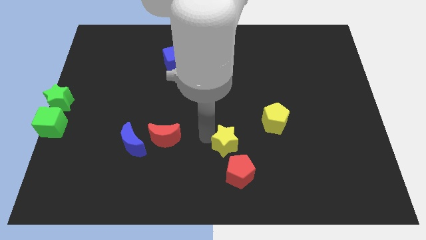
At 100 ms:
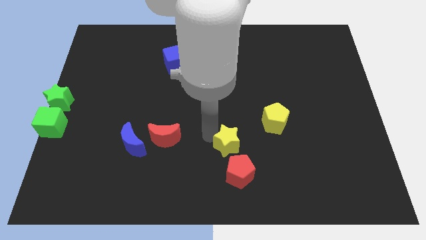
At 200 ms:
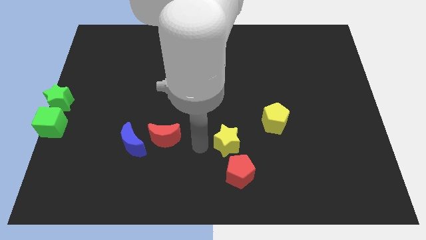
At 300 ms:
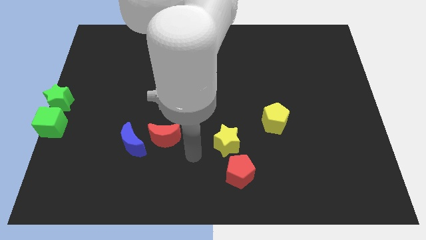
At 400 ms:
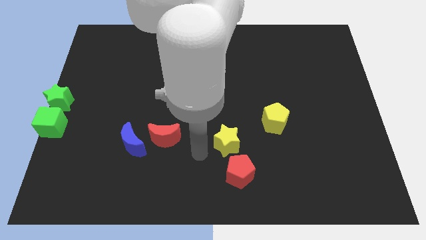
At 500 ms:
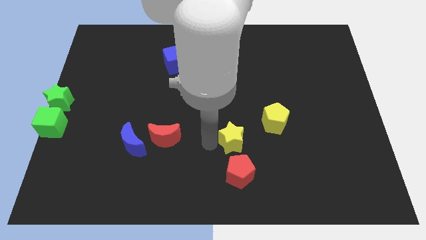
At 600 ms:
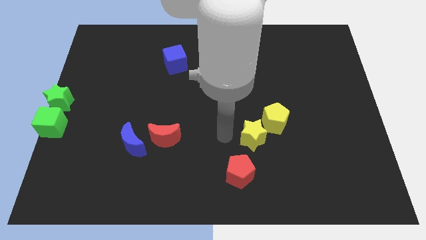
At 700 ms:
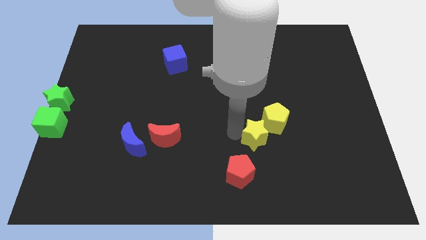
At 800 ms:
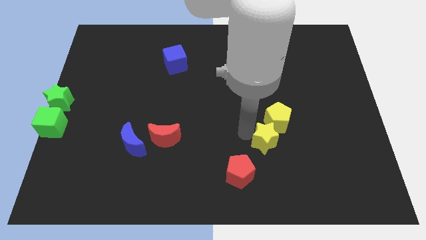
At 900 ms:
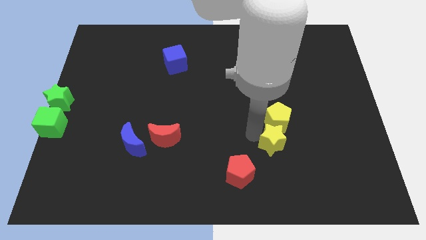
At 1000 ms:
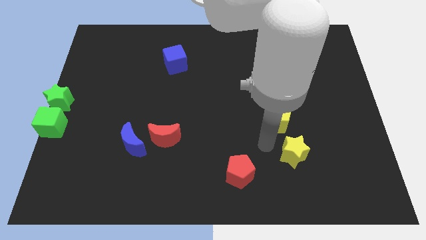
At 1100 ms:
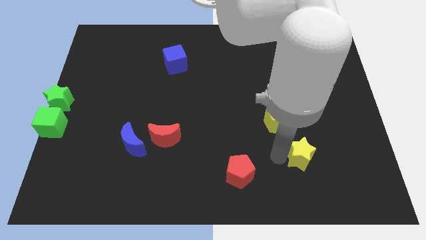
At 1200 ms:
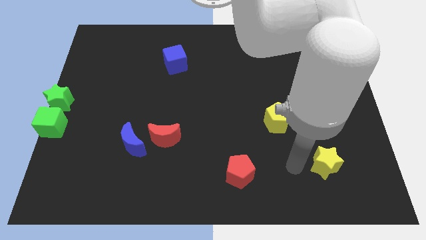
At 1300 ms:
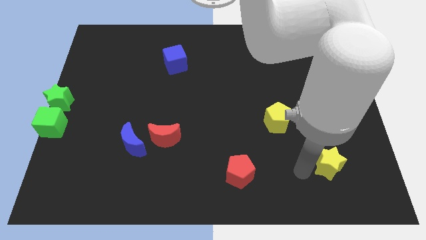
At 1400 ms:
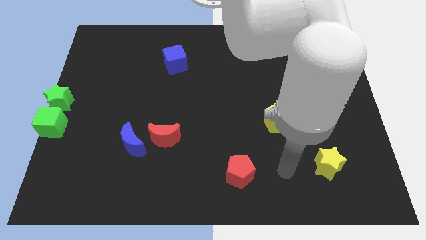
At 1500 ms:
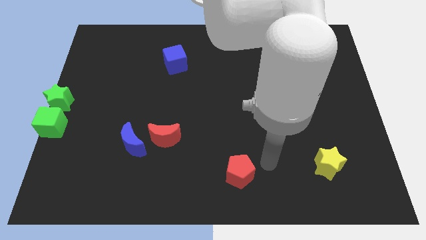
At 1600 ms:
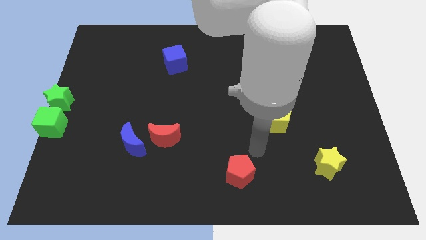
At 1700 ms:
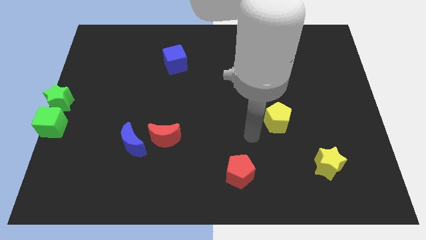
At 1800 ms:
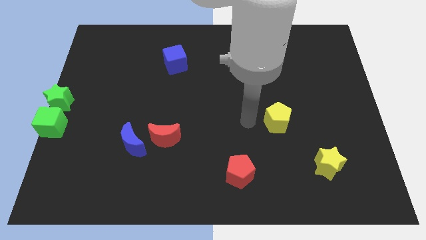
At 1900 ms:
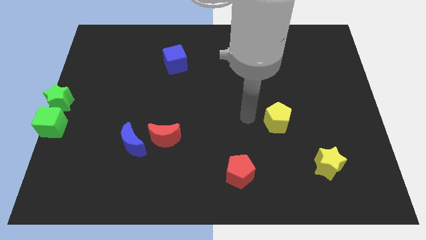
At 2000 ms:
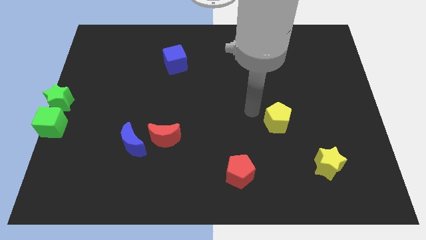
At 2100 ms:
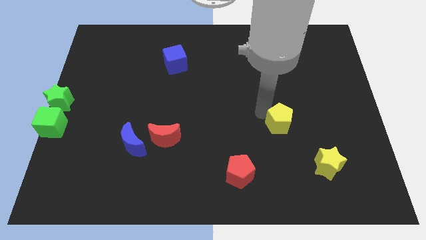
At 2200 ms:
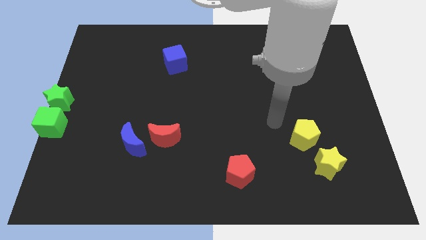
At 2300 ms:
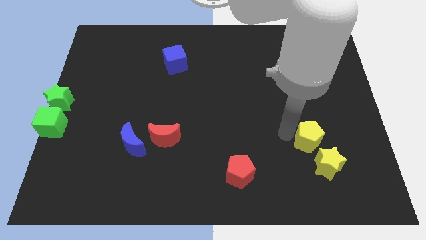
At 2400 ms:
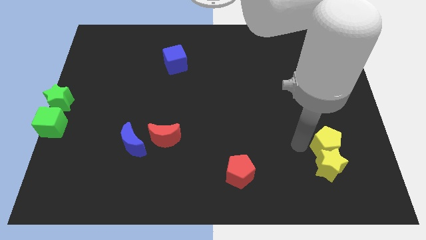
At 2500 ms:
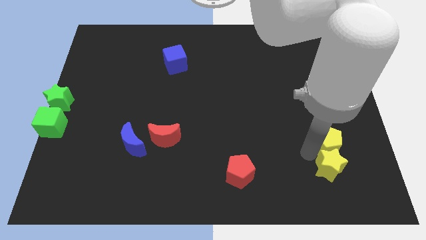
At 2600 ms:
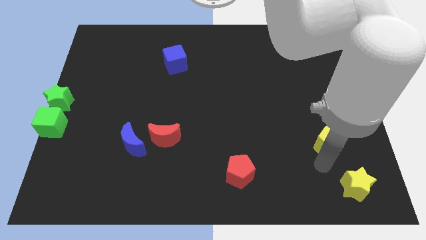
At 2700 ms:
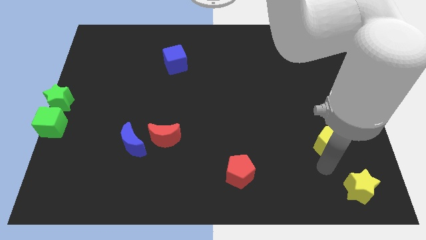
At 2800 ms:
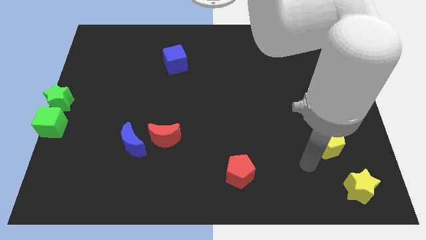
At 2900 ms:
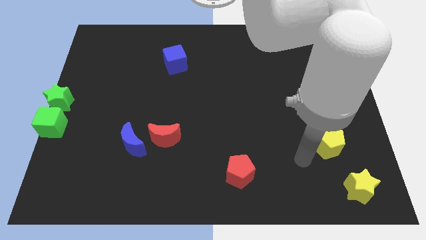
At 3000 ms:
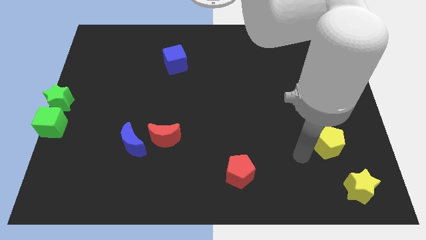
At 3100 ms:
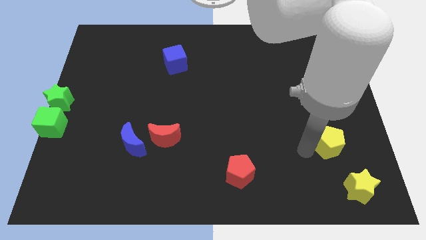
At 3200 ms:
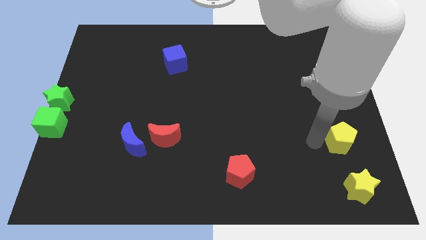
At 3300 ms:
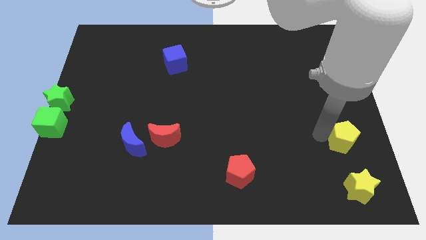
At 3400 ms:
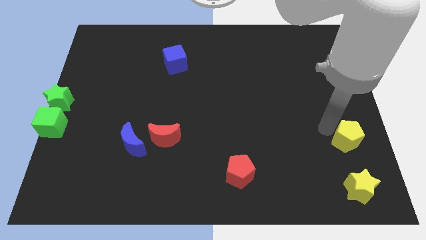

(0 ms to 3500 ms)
move the yellow star to the bottom right side of the board

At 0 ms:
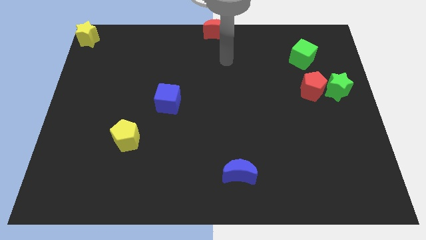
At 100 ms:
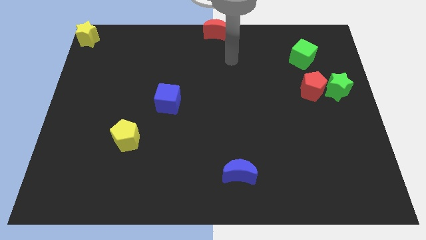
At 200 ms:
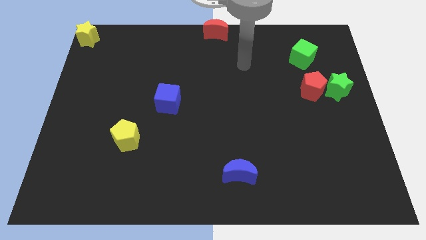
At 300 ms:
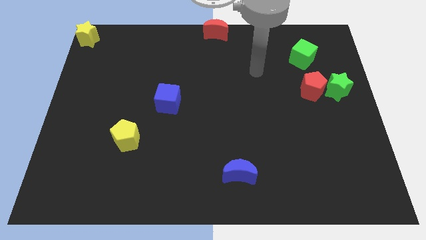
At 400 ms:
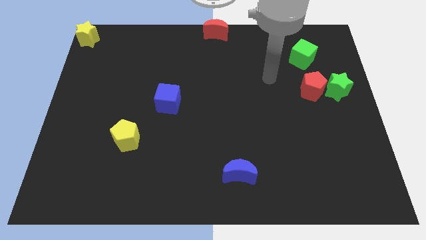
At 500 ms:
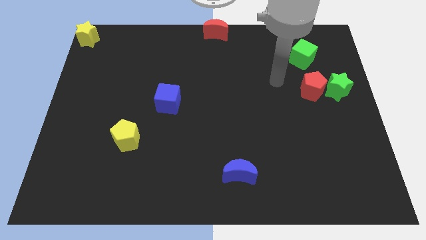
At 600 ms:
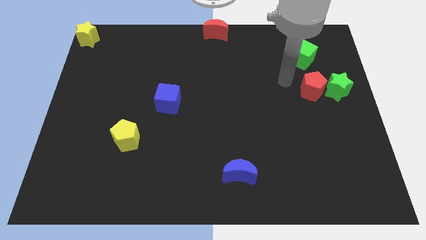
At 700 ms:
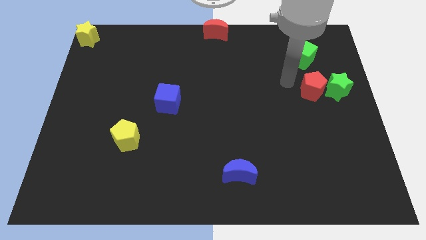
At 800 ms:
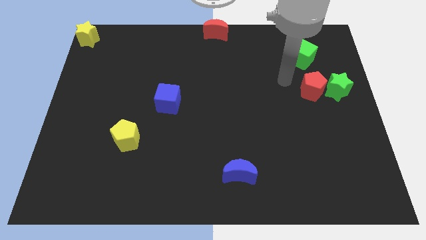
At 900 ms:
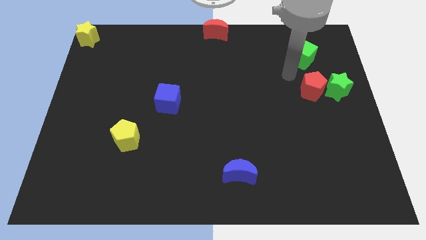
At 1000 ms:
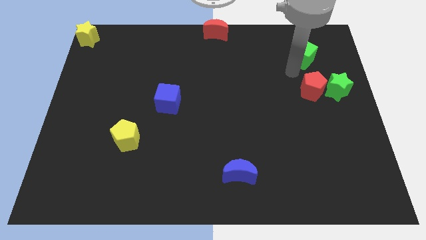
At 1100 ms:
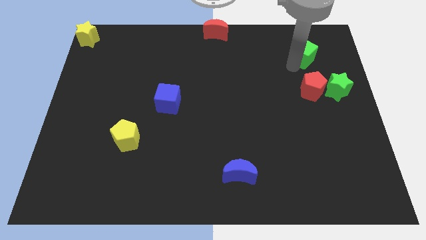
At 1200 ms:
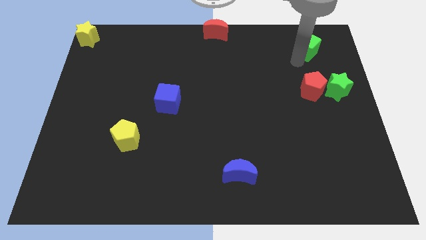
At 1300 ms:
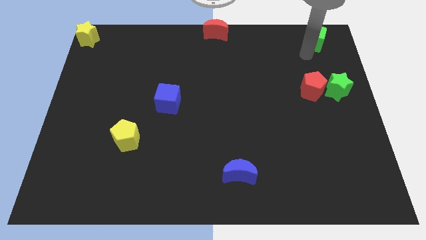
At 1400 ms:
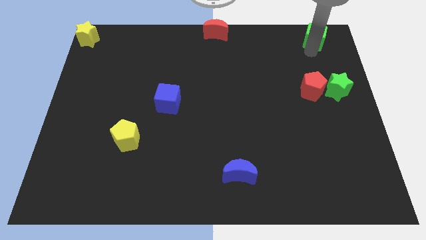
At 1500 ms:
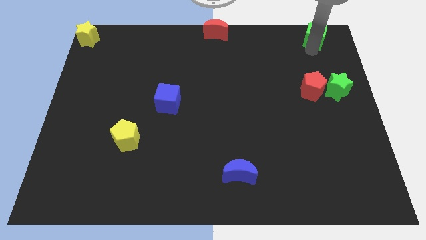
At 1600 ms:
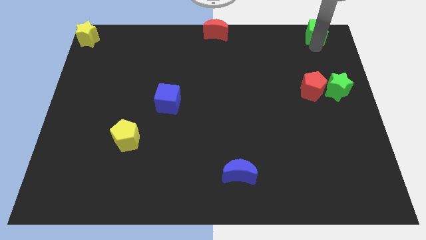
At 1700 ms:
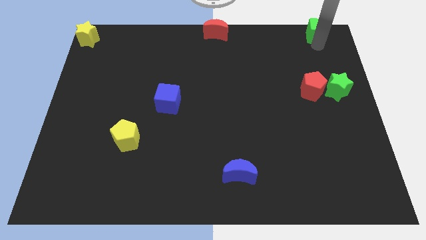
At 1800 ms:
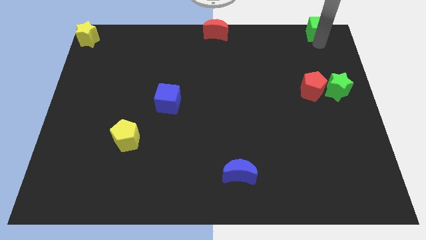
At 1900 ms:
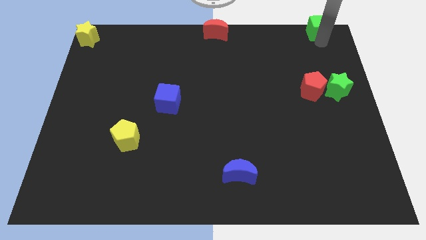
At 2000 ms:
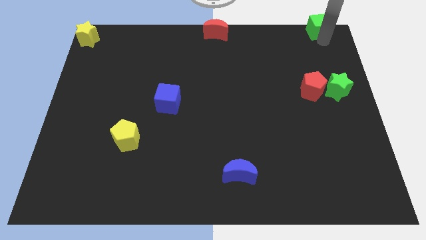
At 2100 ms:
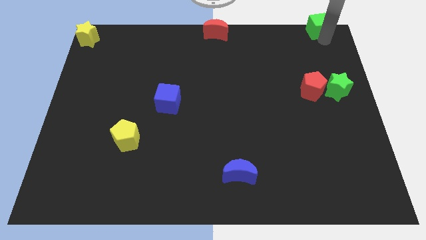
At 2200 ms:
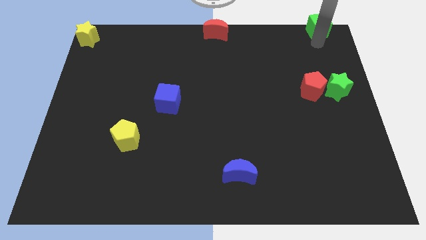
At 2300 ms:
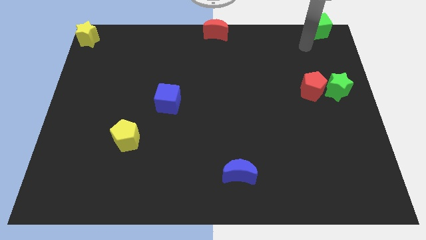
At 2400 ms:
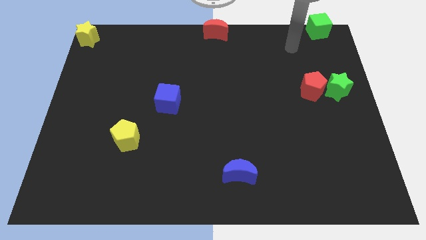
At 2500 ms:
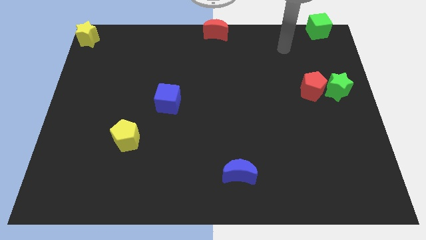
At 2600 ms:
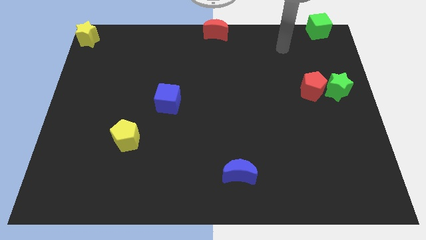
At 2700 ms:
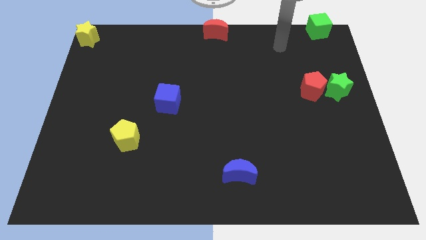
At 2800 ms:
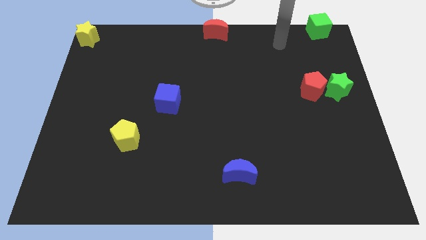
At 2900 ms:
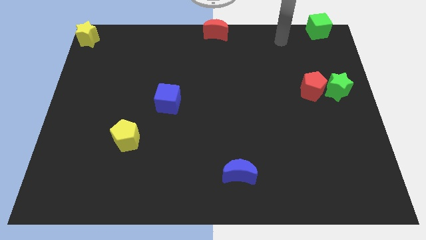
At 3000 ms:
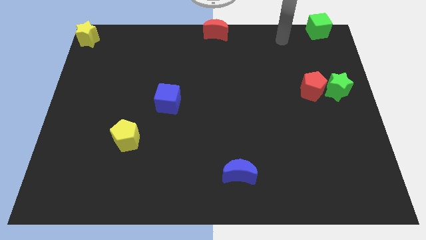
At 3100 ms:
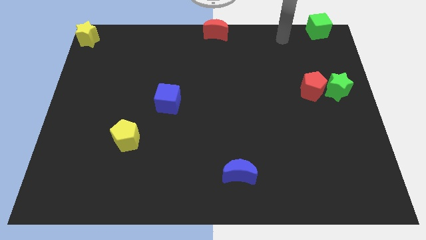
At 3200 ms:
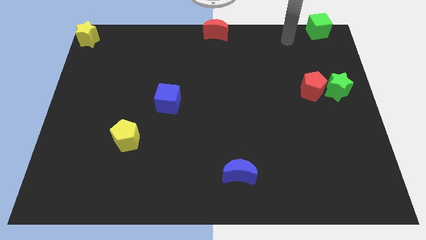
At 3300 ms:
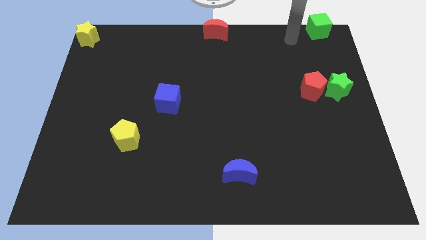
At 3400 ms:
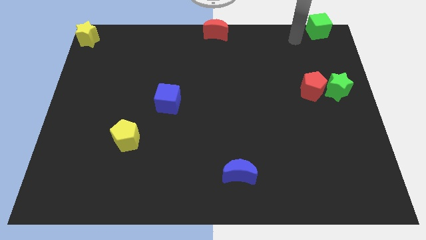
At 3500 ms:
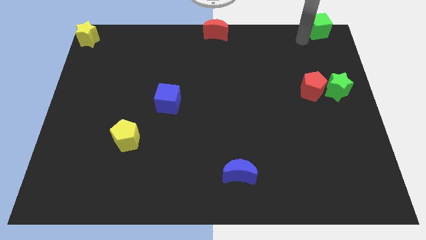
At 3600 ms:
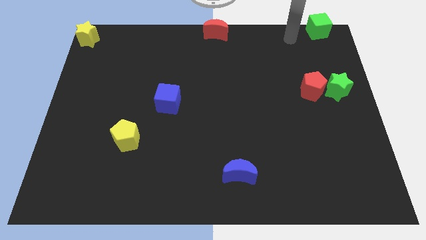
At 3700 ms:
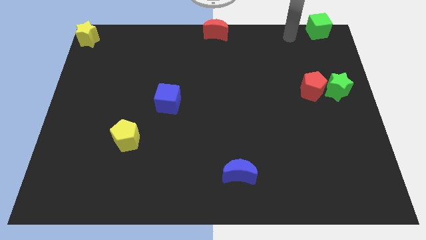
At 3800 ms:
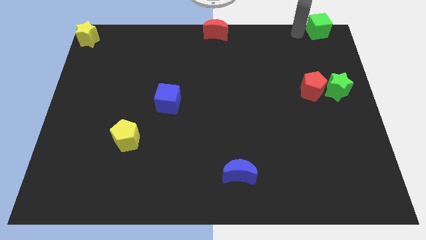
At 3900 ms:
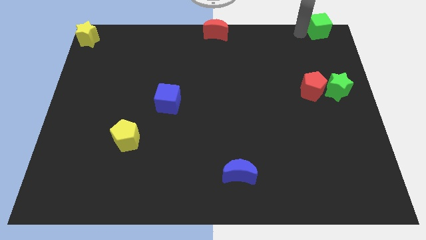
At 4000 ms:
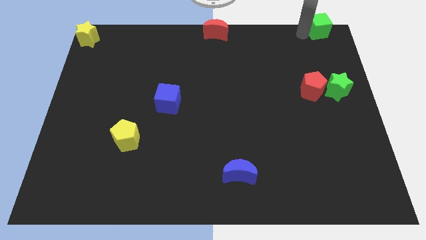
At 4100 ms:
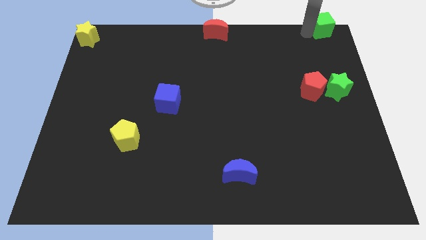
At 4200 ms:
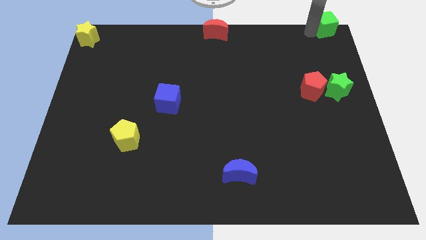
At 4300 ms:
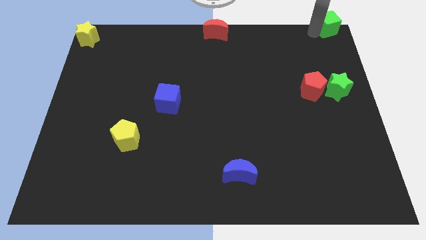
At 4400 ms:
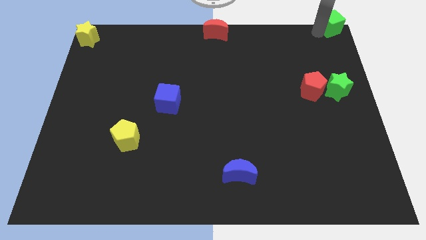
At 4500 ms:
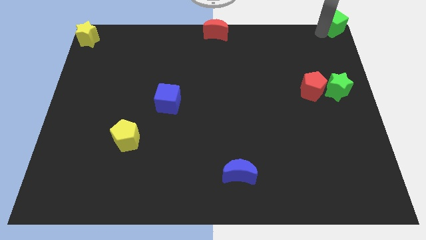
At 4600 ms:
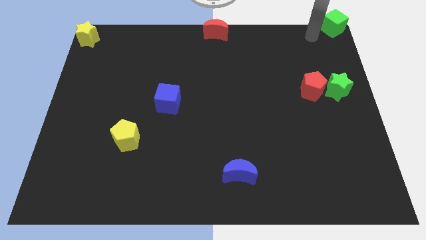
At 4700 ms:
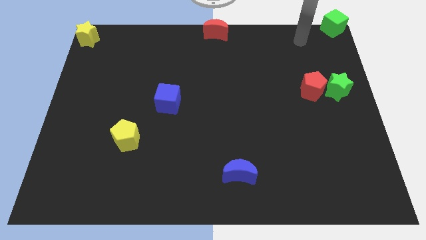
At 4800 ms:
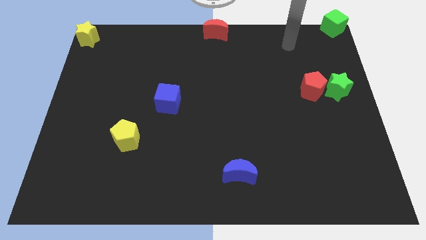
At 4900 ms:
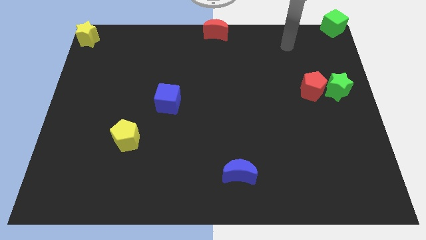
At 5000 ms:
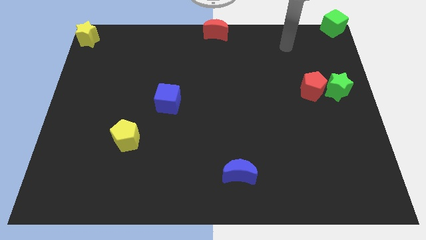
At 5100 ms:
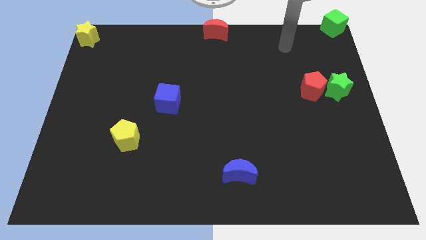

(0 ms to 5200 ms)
push the green cube to the top right corner of the board

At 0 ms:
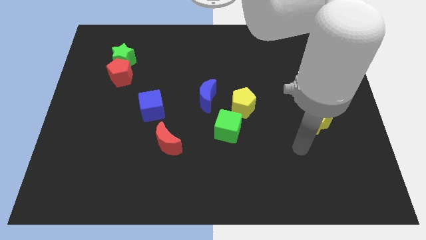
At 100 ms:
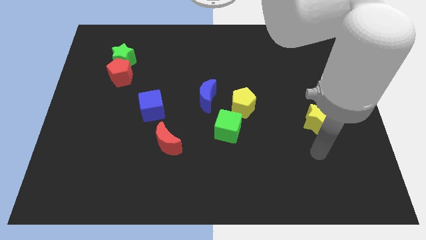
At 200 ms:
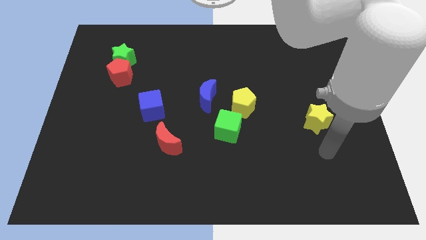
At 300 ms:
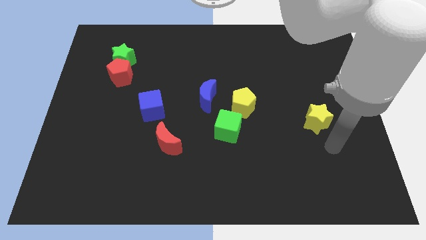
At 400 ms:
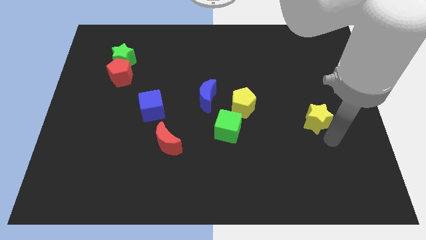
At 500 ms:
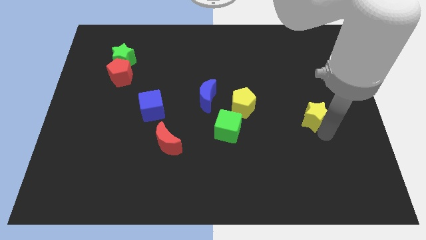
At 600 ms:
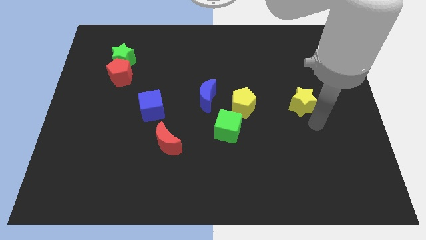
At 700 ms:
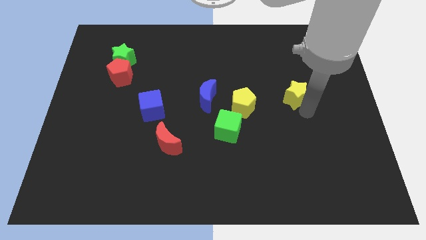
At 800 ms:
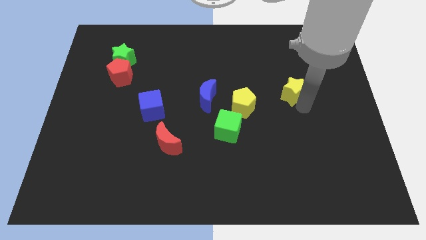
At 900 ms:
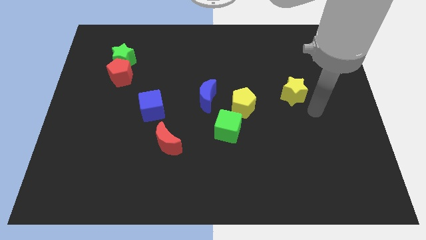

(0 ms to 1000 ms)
push the yellow star towards the center of the board
